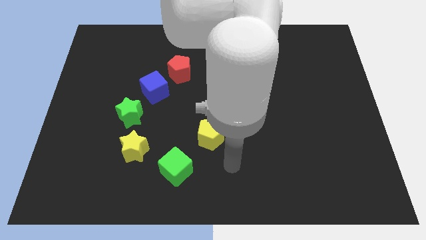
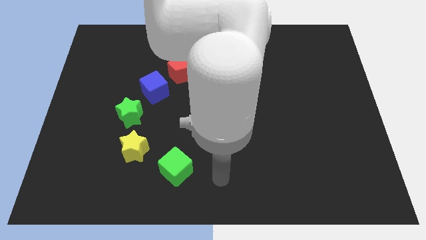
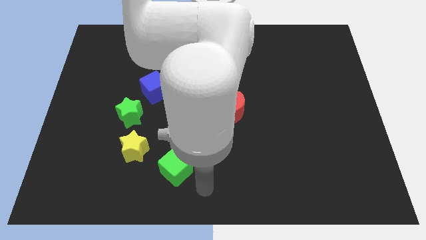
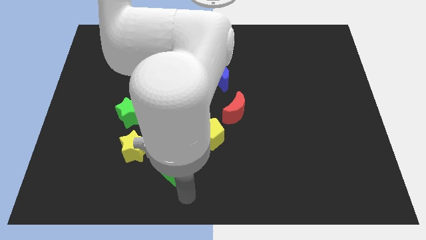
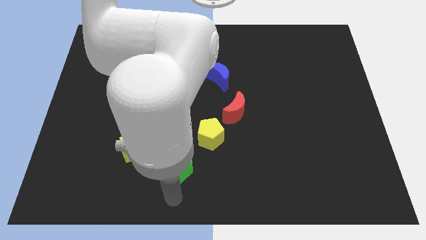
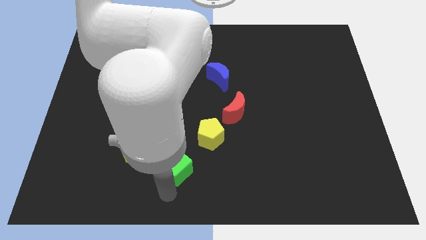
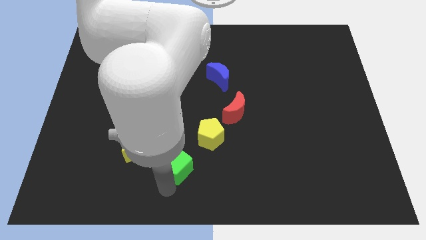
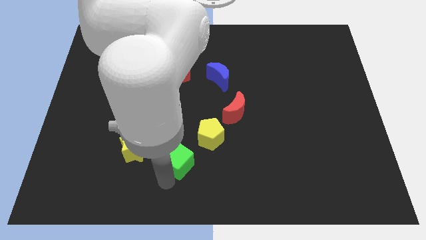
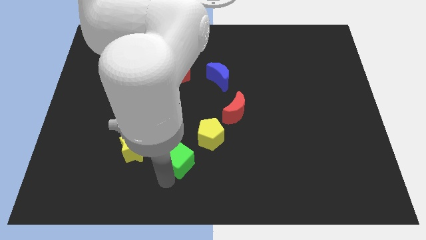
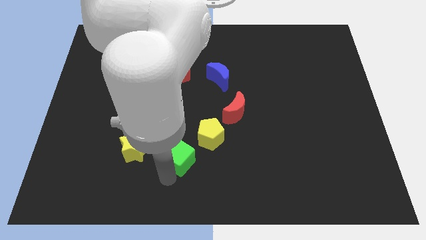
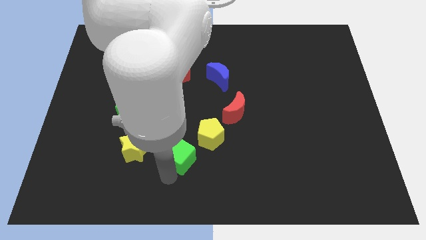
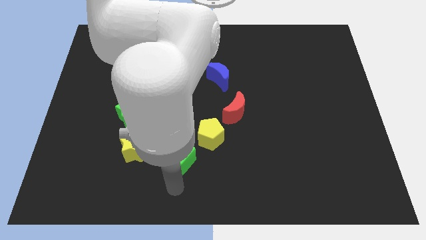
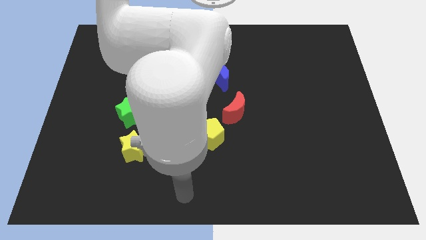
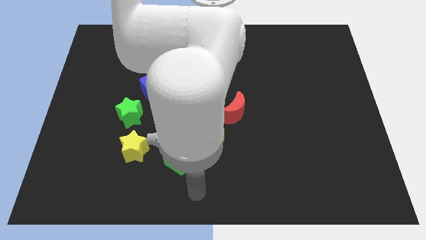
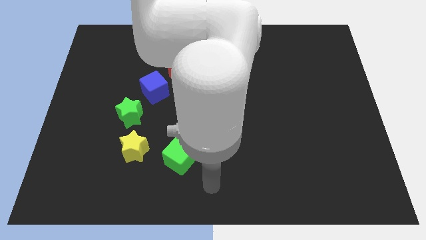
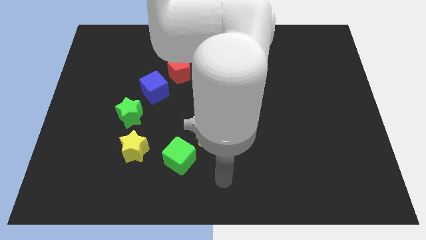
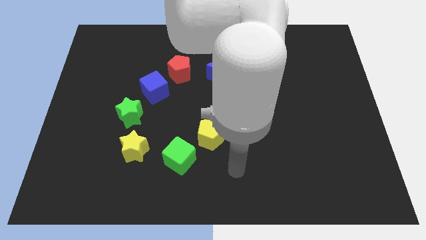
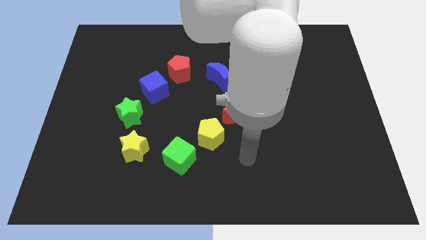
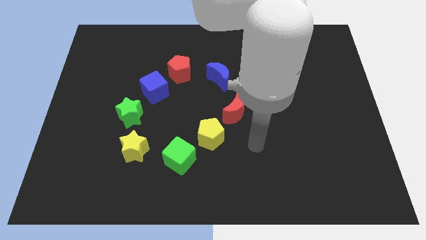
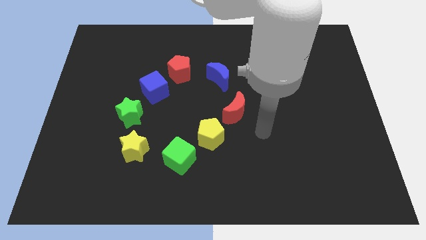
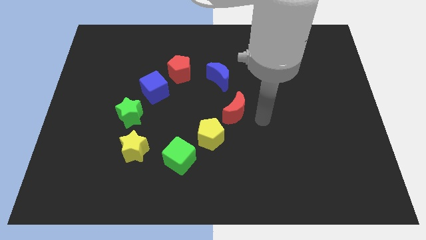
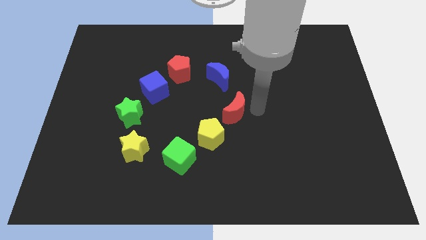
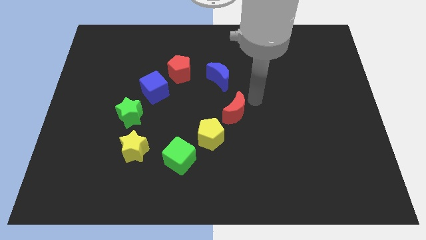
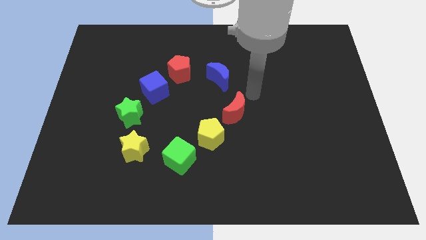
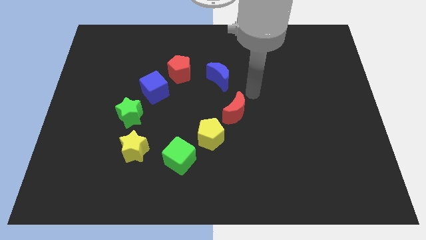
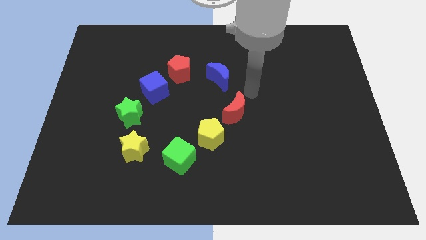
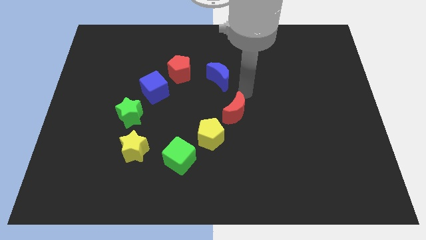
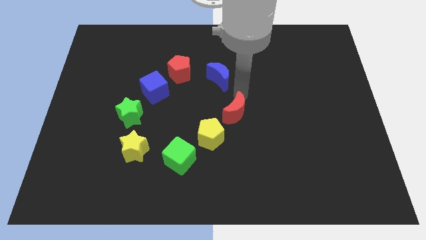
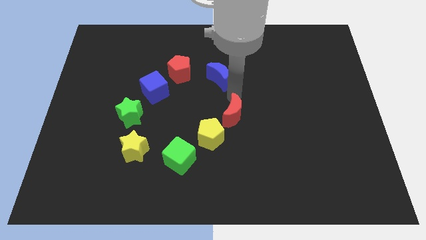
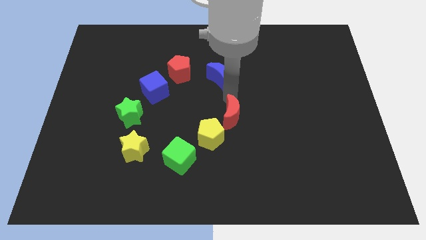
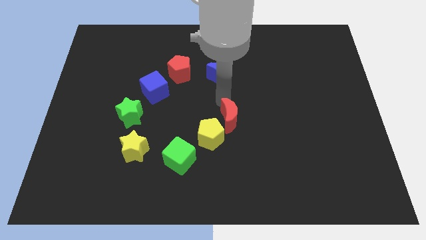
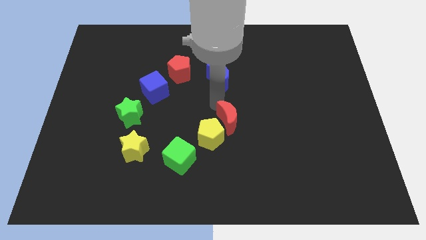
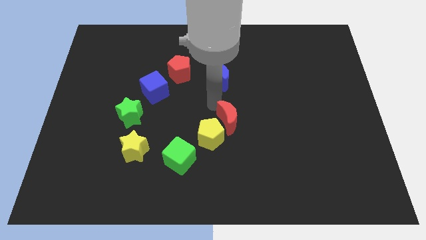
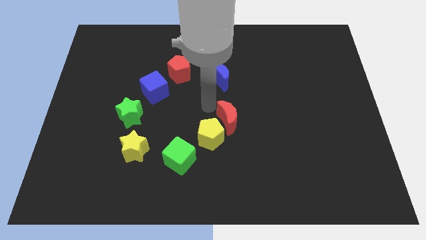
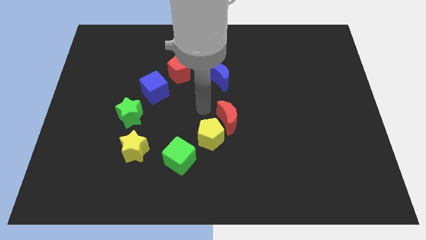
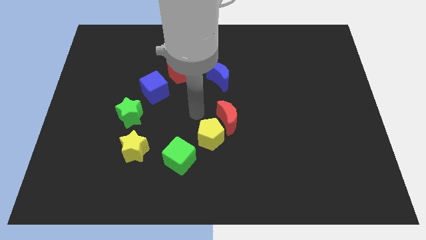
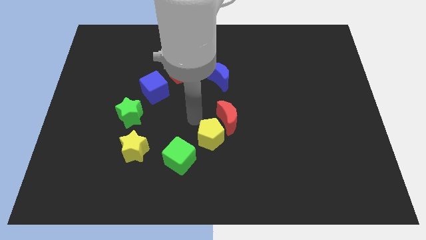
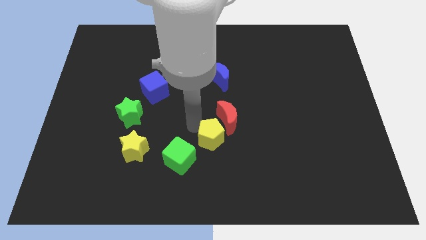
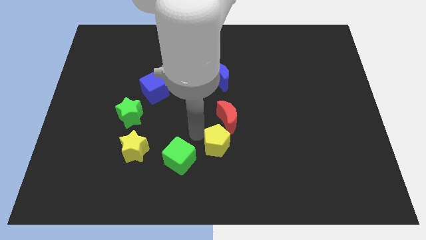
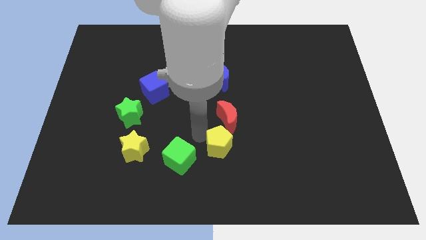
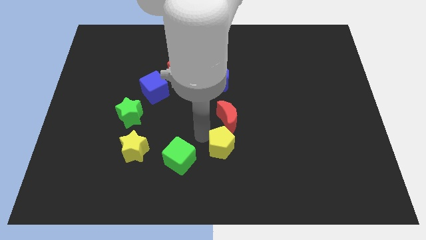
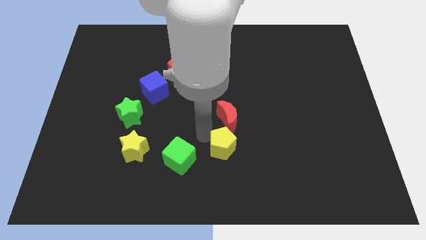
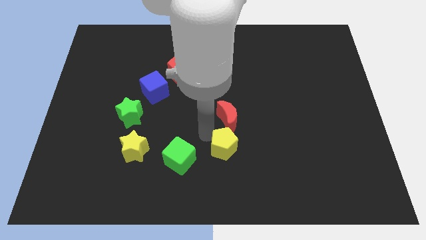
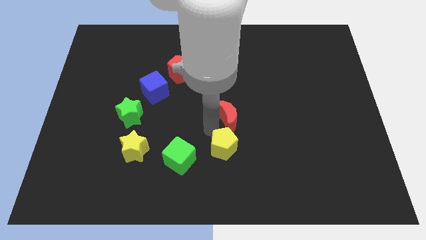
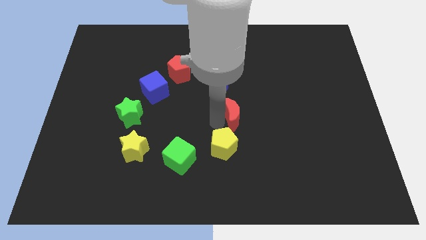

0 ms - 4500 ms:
slide the red moon vertically on top of the yellow pentagon

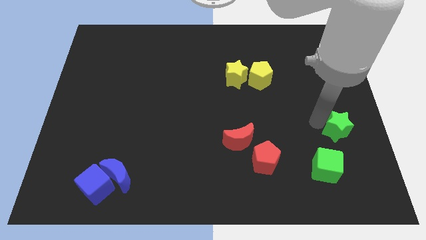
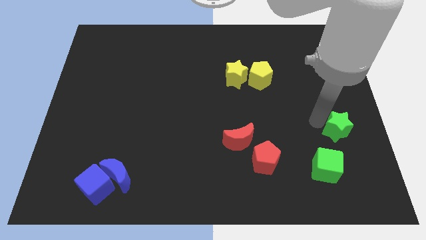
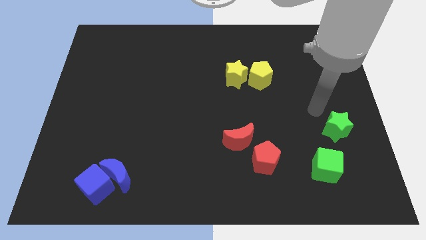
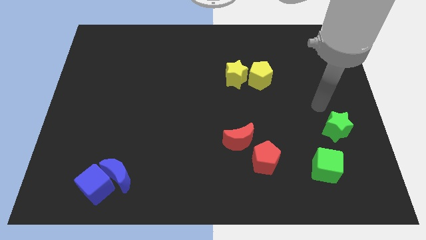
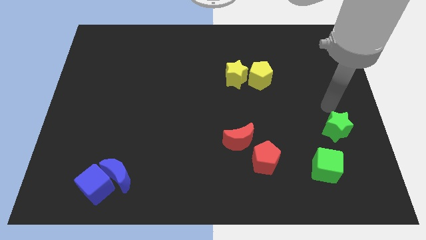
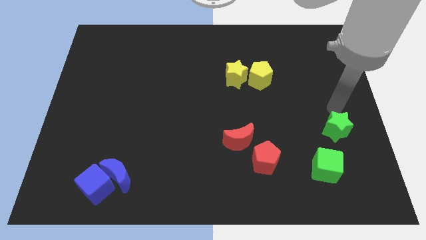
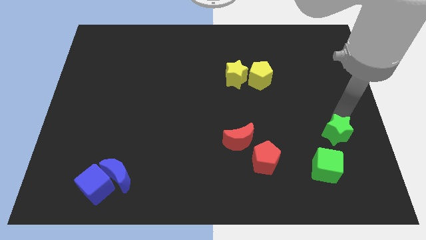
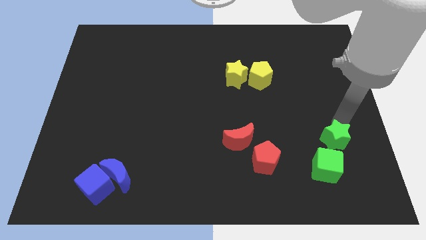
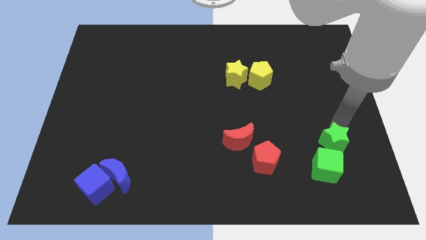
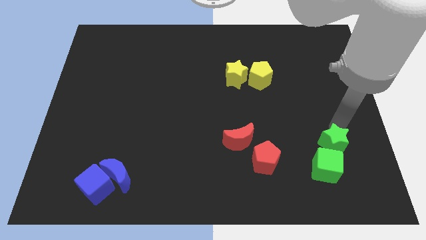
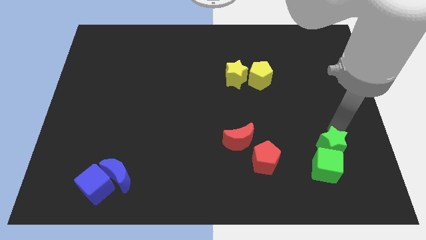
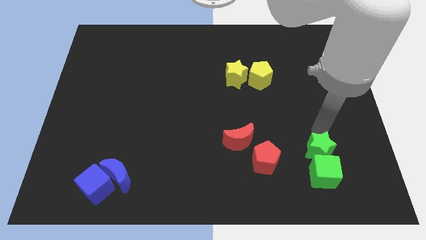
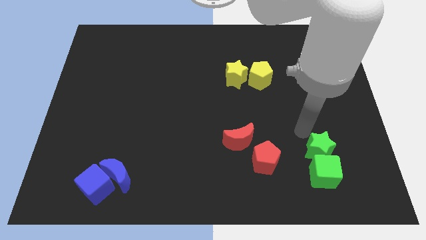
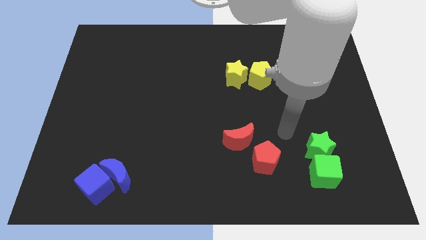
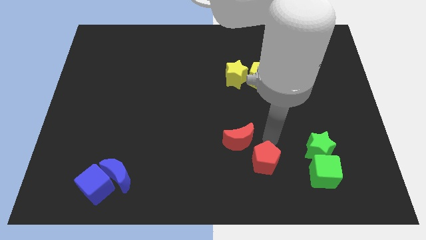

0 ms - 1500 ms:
put the green star and green cube together

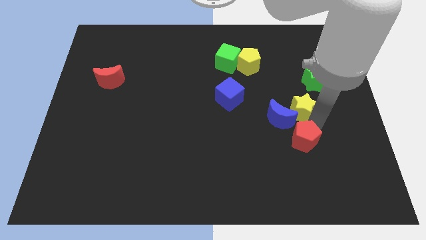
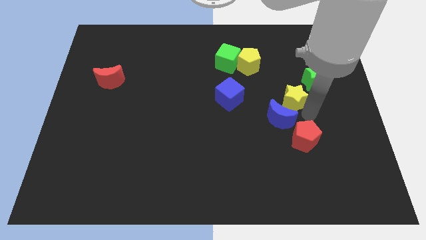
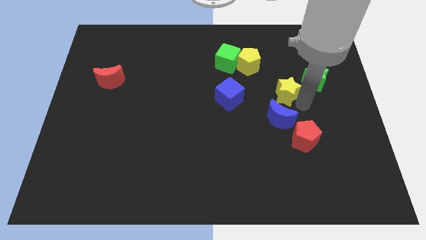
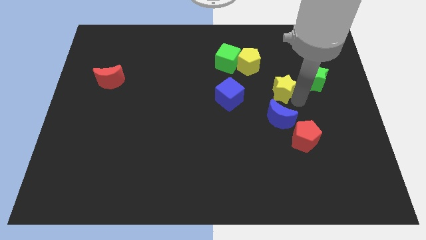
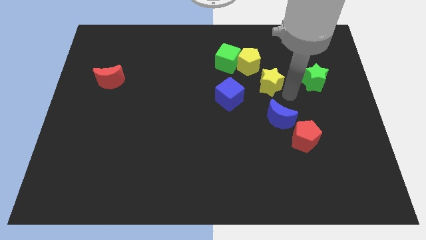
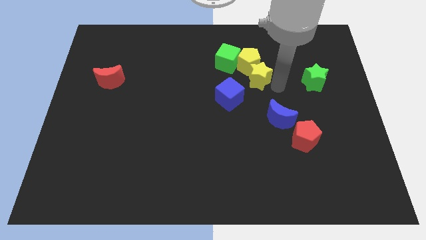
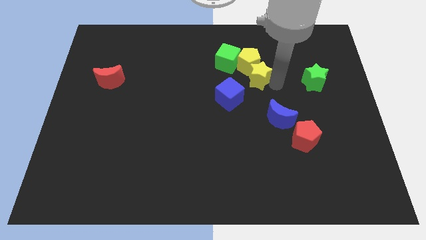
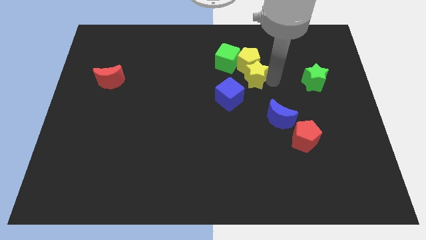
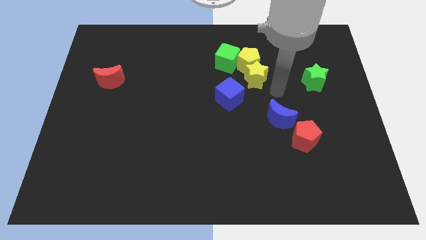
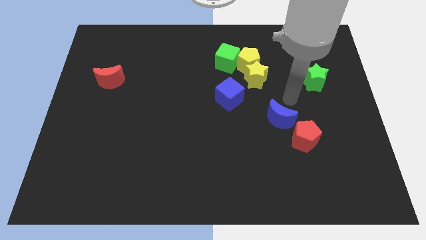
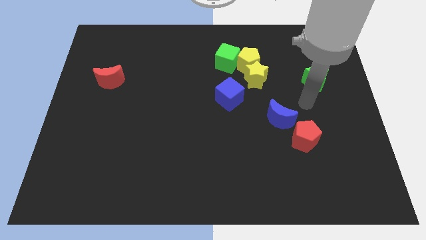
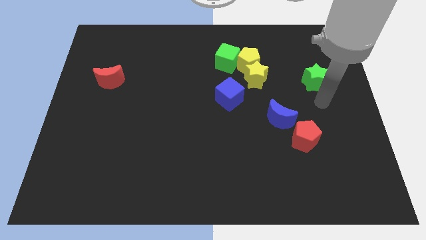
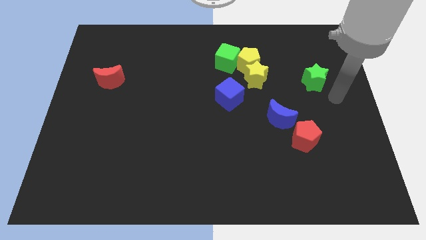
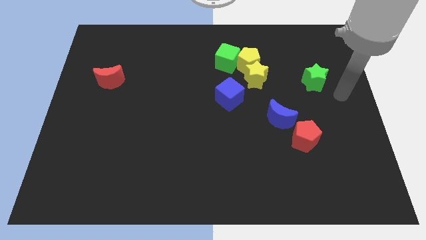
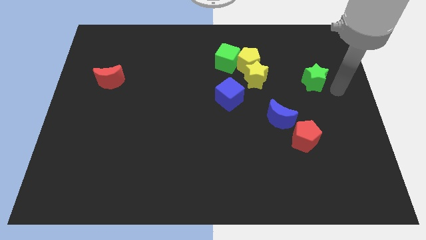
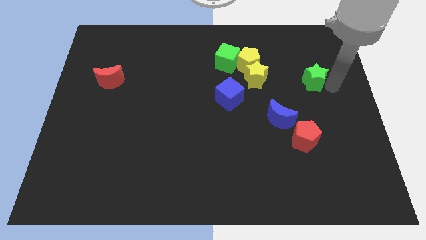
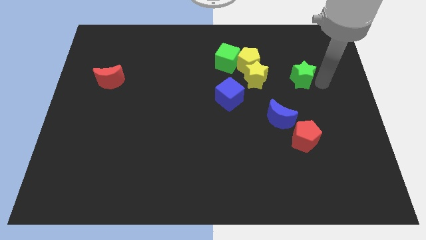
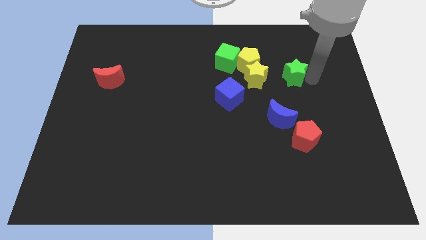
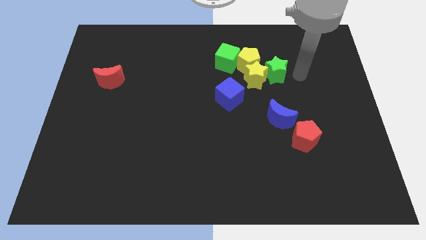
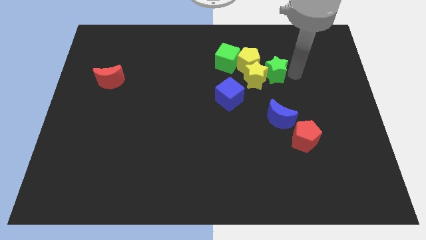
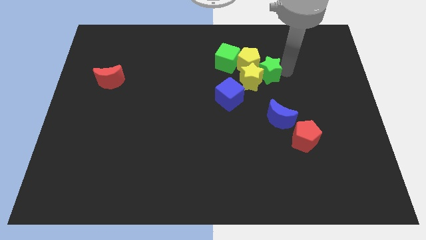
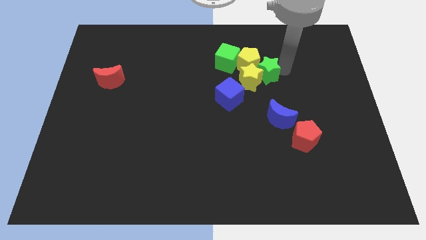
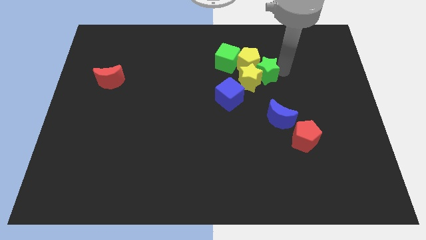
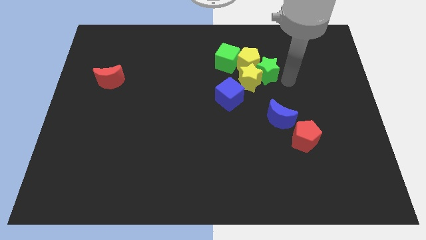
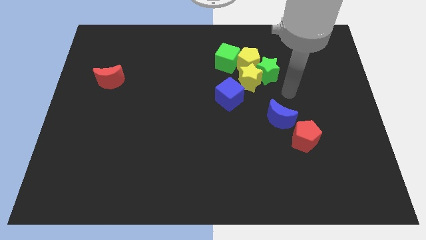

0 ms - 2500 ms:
move the green star and yellow star into the yellow pentagon

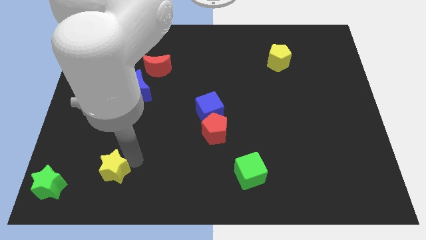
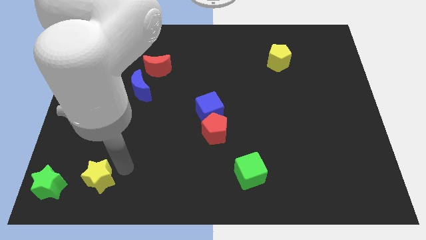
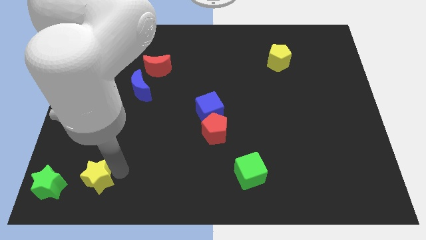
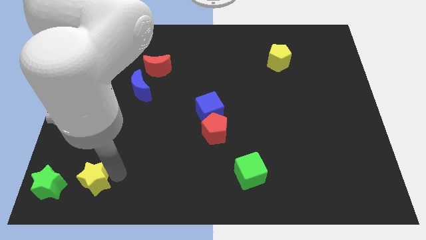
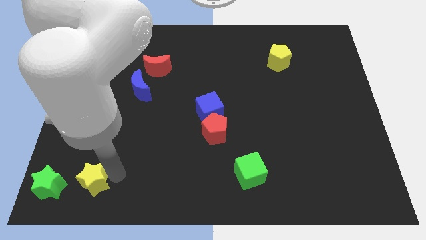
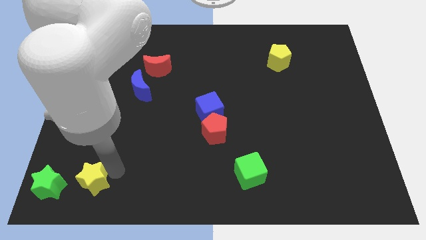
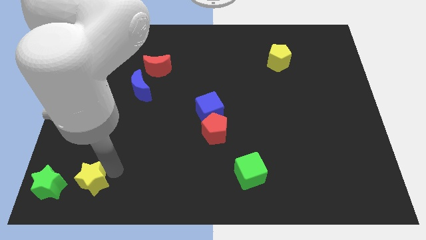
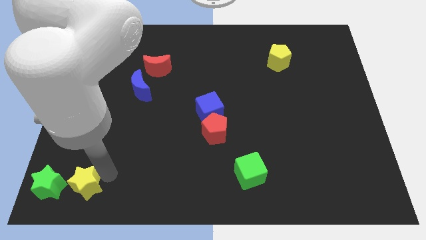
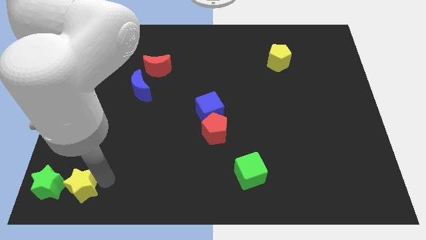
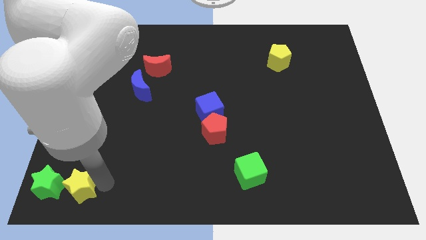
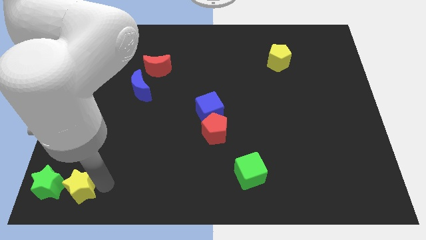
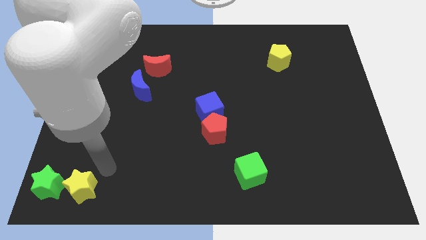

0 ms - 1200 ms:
move the yellow star to the right of the green star
